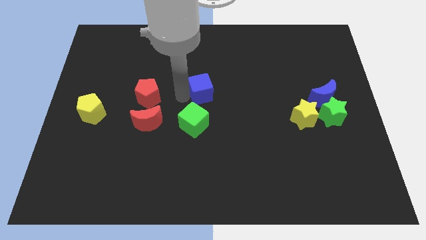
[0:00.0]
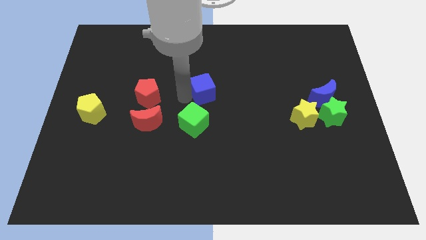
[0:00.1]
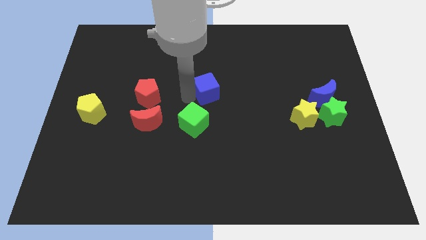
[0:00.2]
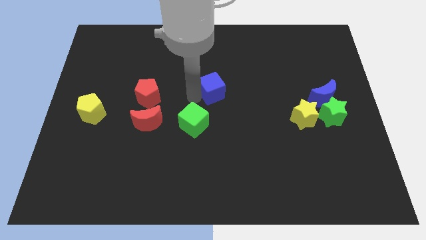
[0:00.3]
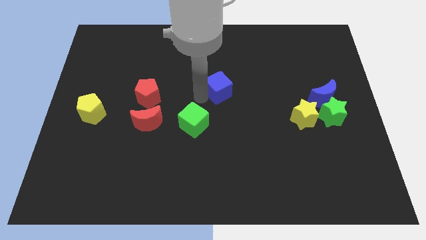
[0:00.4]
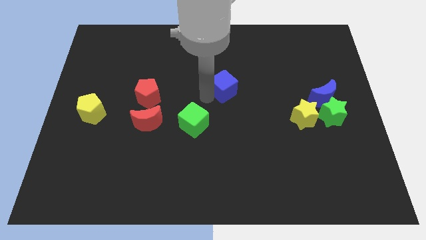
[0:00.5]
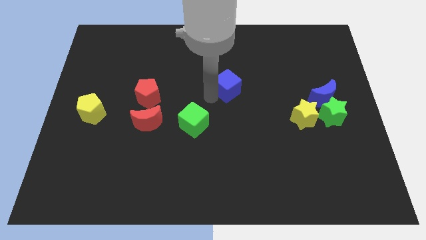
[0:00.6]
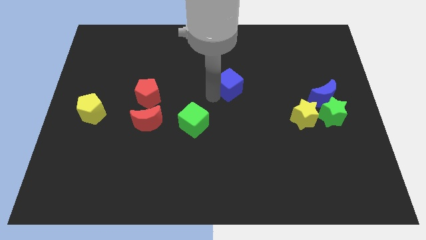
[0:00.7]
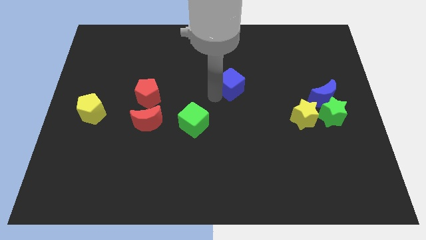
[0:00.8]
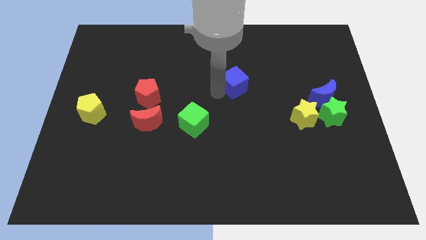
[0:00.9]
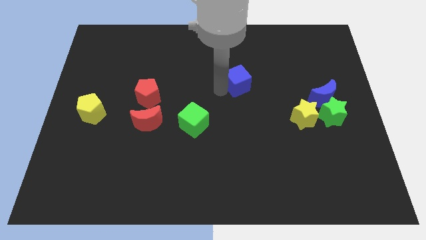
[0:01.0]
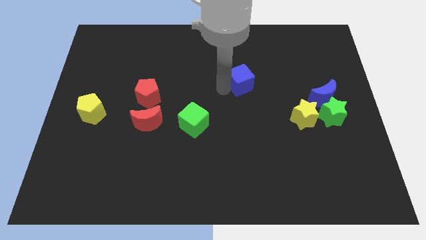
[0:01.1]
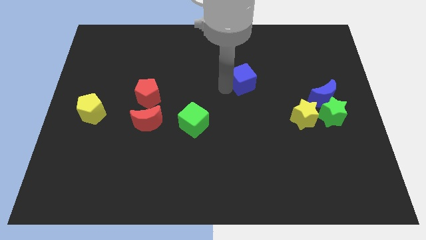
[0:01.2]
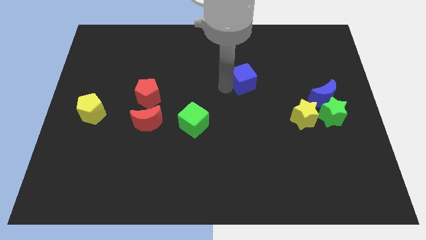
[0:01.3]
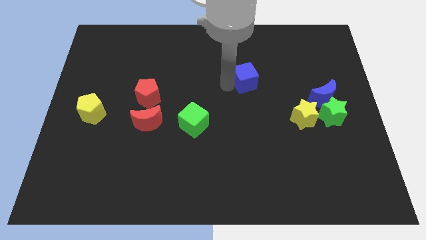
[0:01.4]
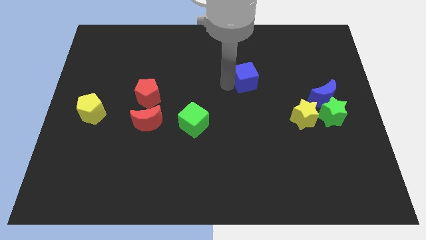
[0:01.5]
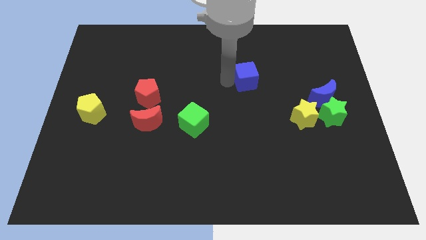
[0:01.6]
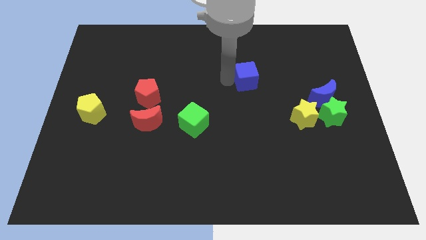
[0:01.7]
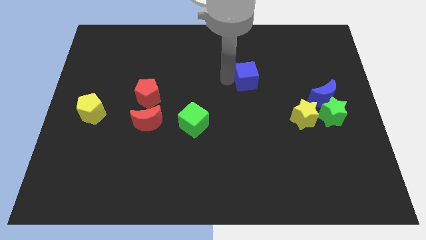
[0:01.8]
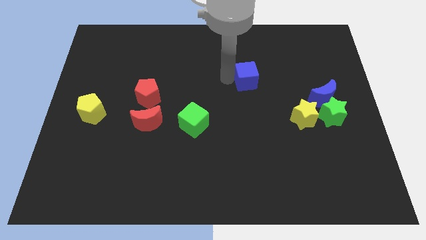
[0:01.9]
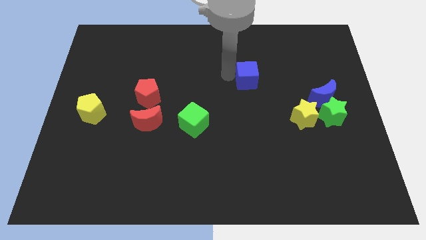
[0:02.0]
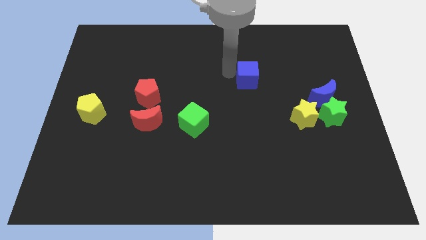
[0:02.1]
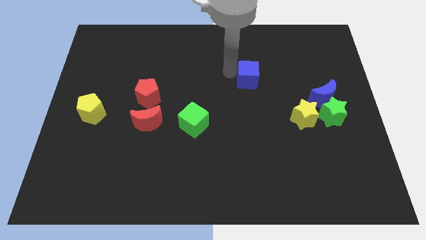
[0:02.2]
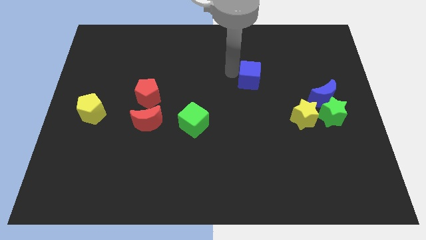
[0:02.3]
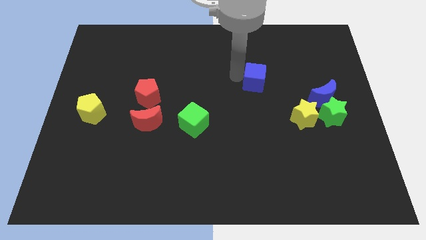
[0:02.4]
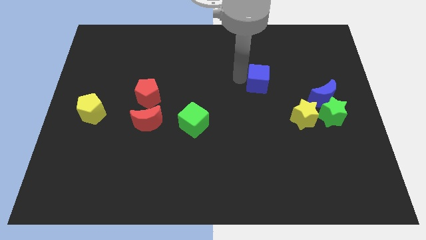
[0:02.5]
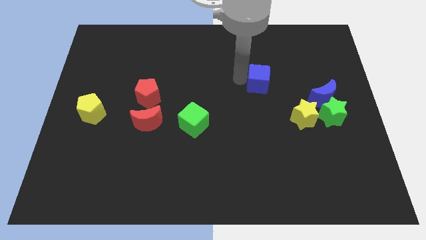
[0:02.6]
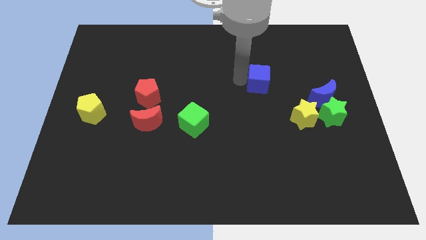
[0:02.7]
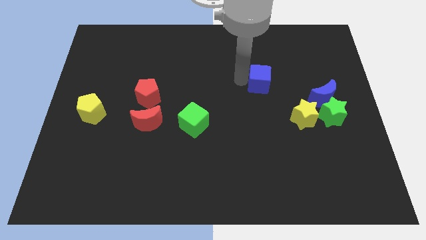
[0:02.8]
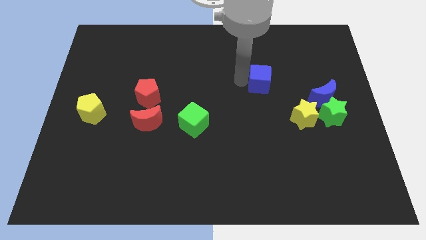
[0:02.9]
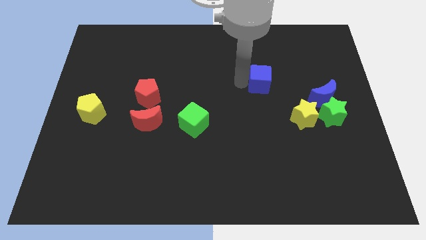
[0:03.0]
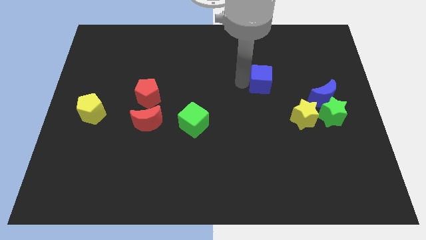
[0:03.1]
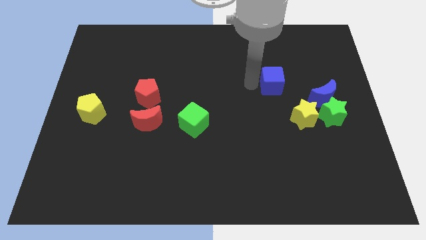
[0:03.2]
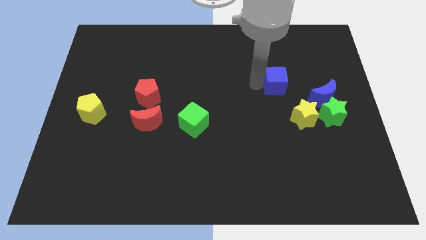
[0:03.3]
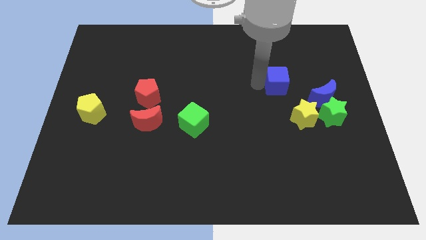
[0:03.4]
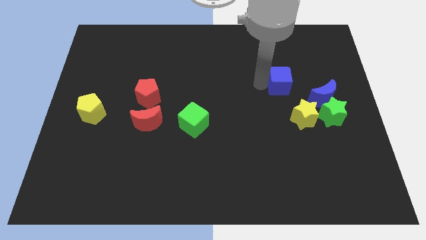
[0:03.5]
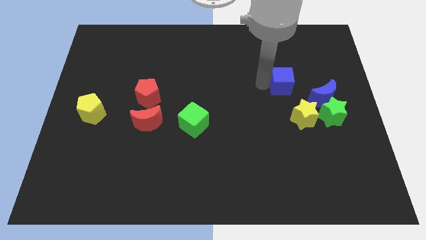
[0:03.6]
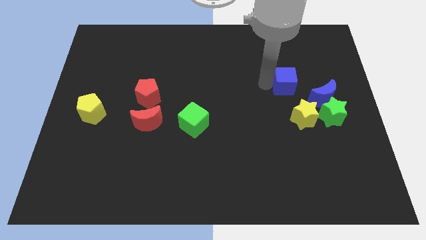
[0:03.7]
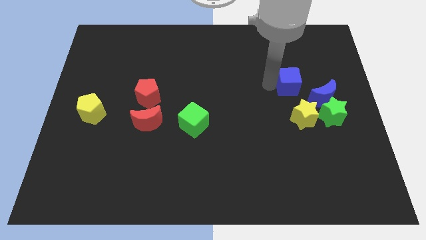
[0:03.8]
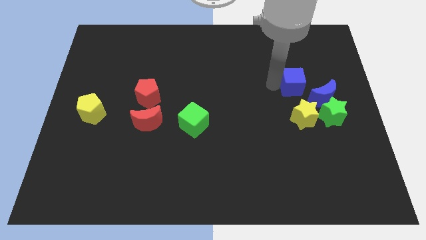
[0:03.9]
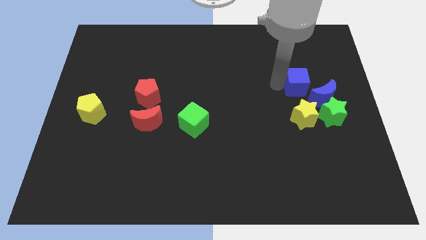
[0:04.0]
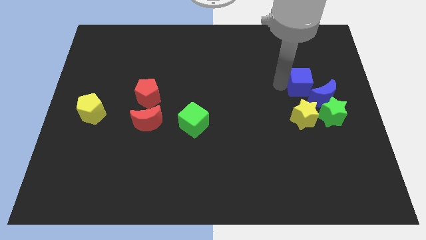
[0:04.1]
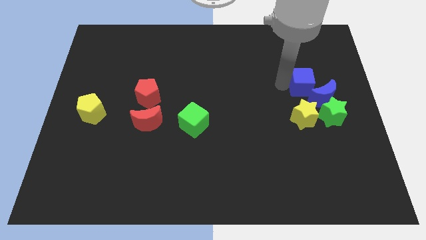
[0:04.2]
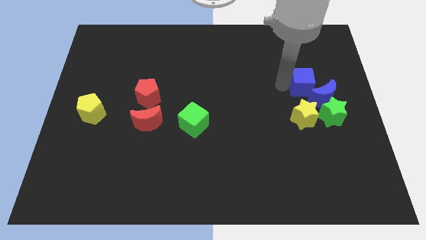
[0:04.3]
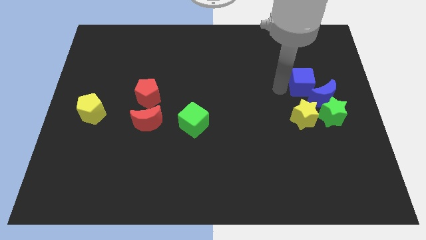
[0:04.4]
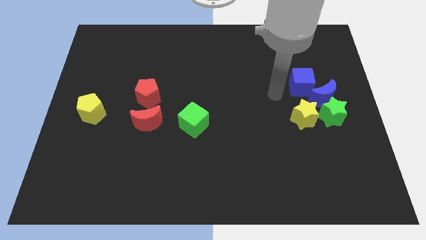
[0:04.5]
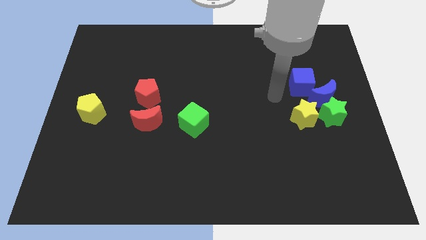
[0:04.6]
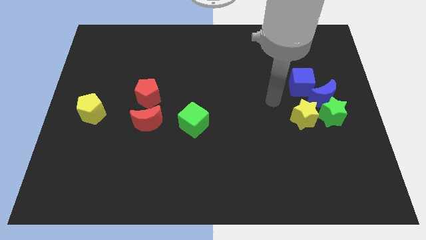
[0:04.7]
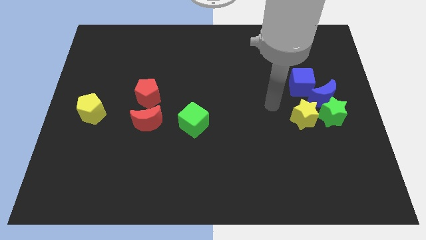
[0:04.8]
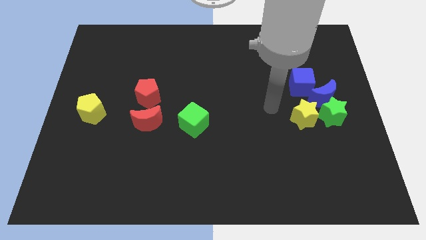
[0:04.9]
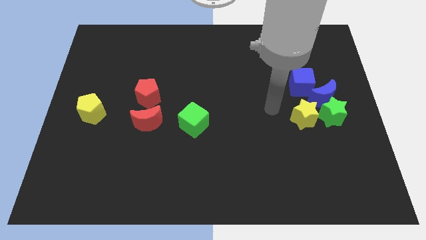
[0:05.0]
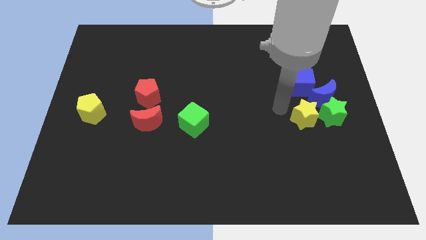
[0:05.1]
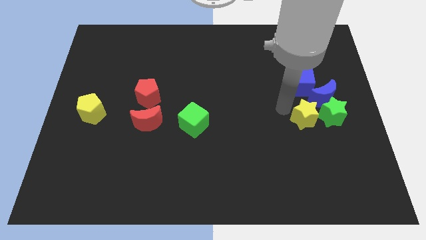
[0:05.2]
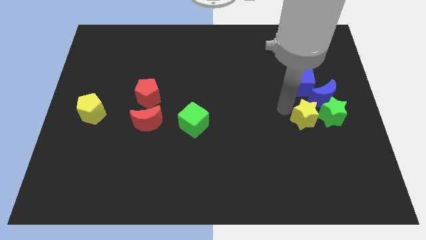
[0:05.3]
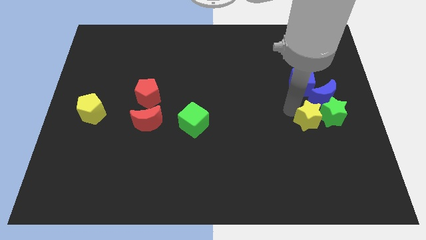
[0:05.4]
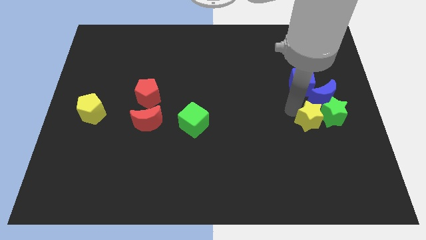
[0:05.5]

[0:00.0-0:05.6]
group up the blue blocks and other two stars at the right side of the table

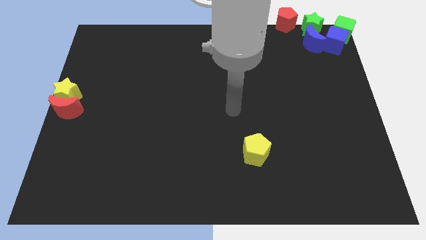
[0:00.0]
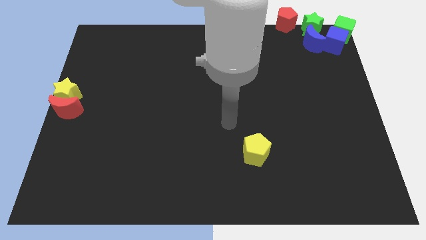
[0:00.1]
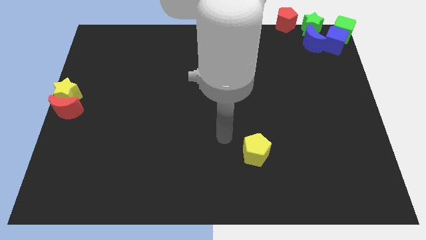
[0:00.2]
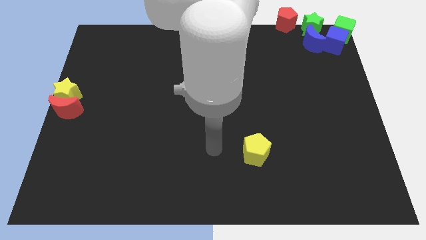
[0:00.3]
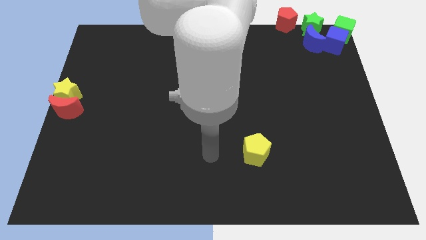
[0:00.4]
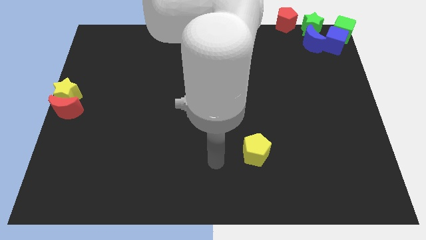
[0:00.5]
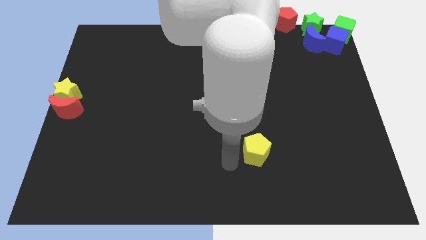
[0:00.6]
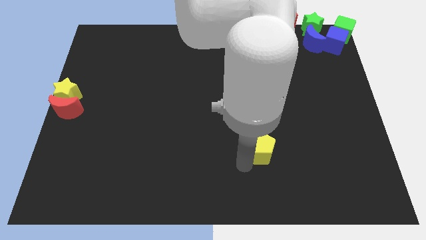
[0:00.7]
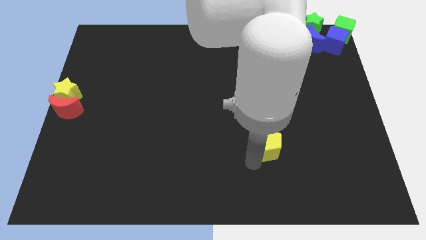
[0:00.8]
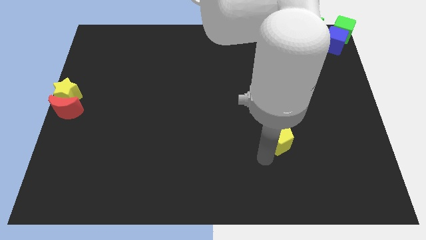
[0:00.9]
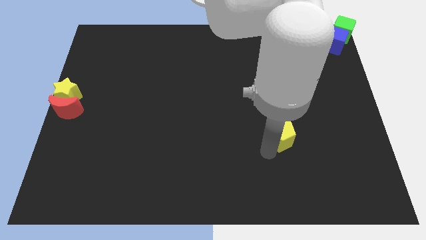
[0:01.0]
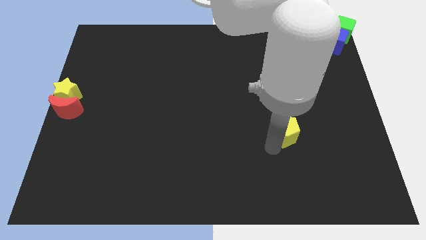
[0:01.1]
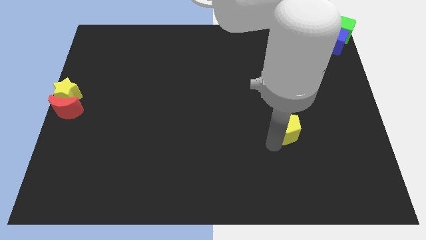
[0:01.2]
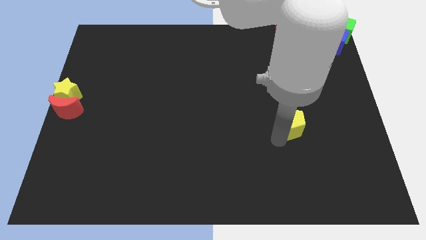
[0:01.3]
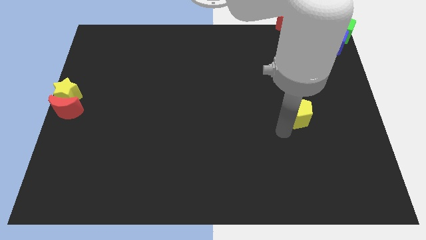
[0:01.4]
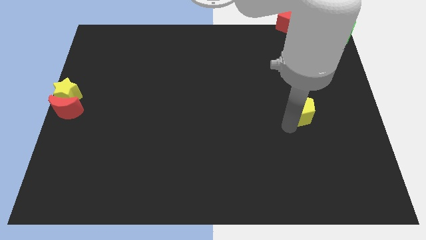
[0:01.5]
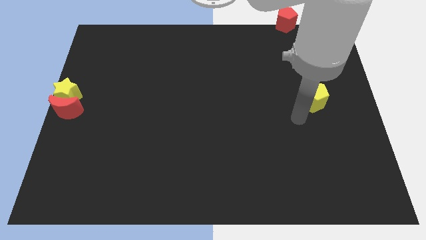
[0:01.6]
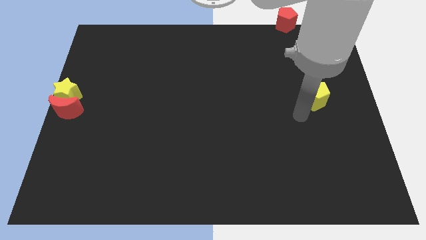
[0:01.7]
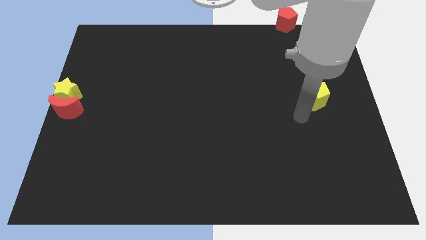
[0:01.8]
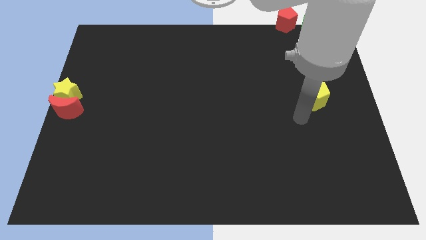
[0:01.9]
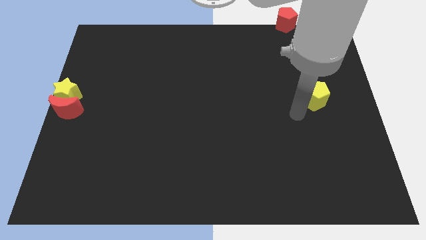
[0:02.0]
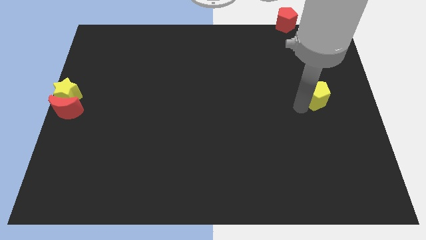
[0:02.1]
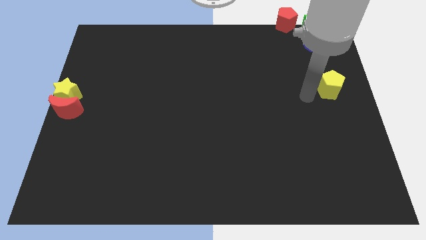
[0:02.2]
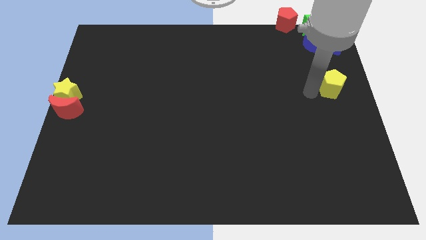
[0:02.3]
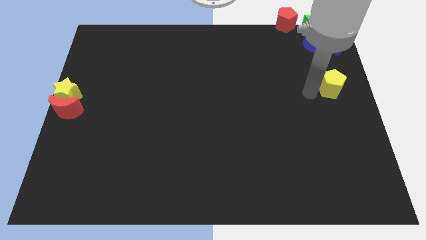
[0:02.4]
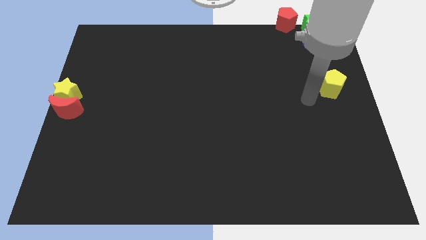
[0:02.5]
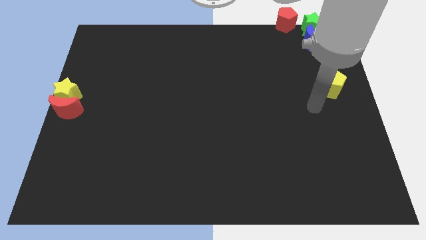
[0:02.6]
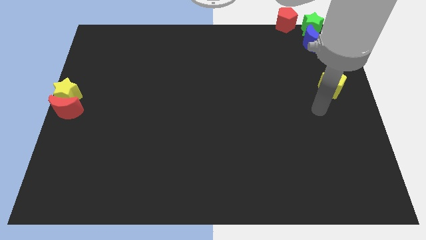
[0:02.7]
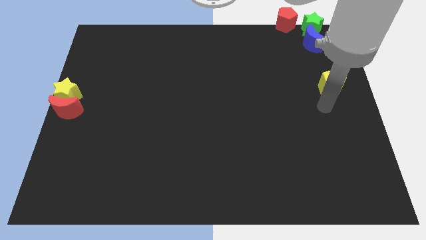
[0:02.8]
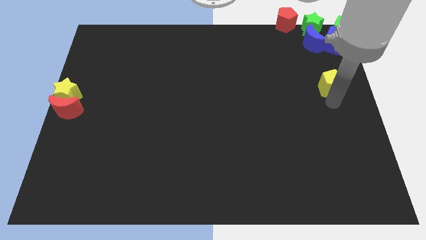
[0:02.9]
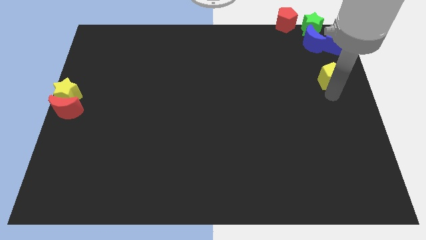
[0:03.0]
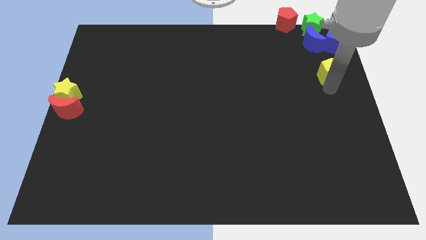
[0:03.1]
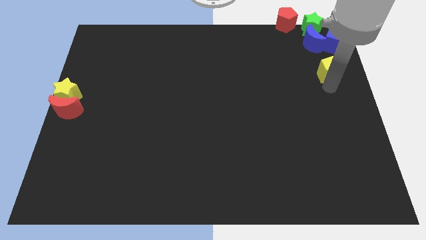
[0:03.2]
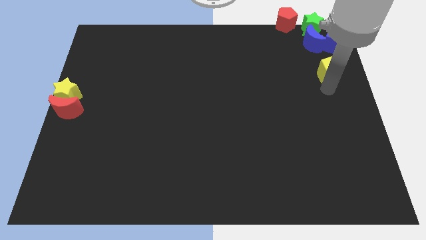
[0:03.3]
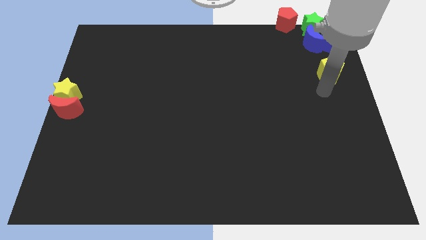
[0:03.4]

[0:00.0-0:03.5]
push the yellow pentagon towards top right of the board
